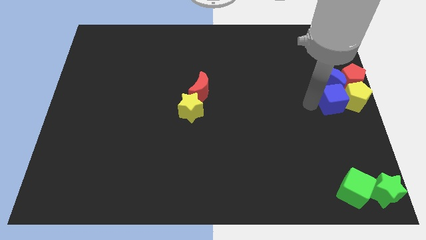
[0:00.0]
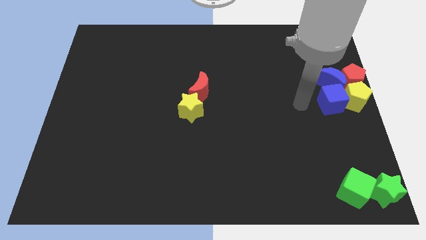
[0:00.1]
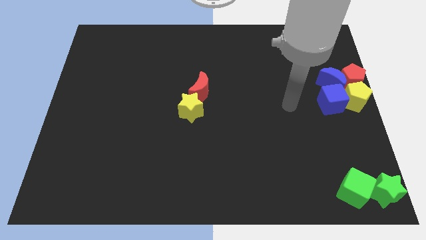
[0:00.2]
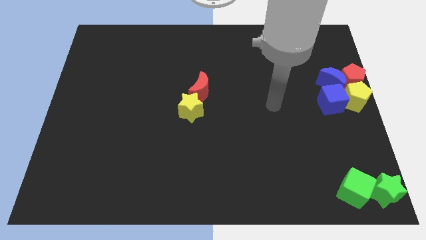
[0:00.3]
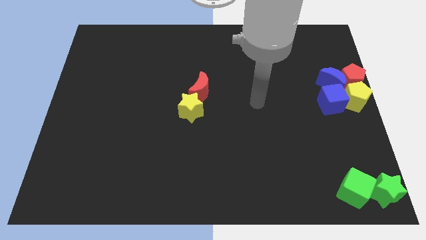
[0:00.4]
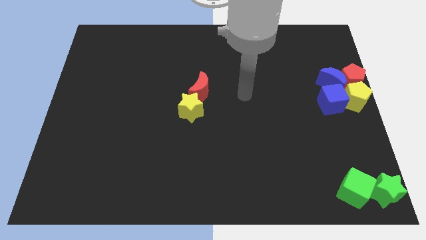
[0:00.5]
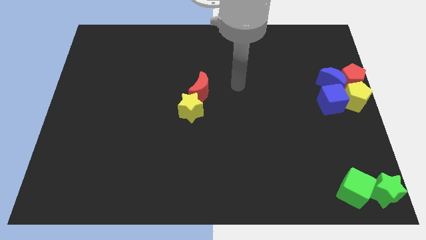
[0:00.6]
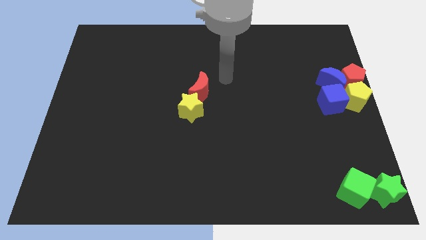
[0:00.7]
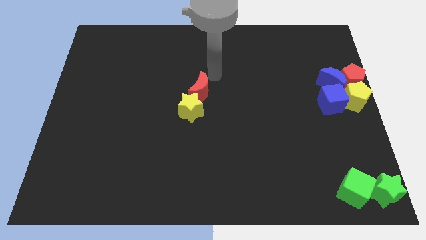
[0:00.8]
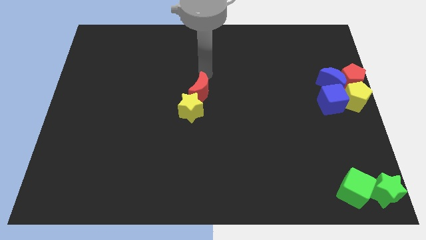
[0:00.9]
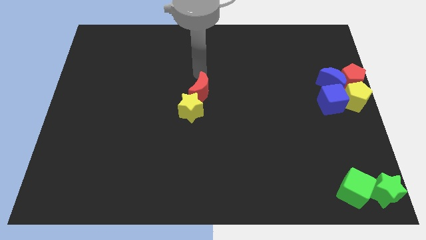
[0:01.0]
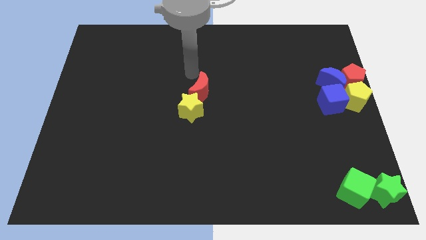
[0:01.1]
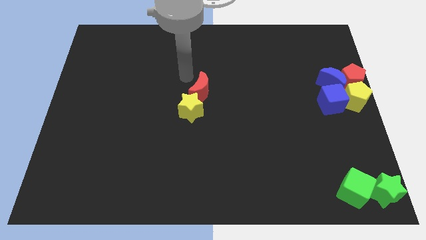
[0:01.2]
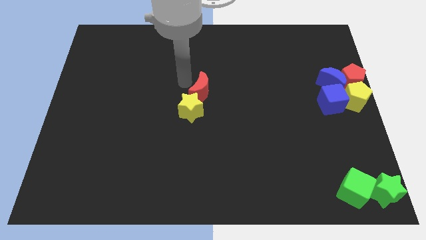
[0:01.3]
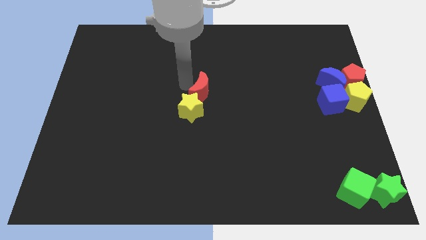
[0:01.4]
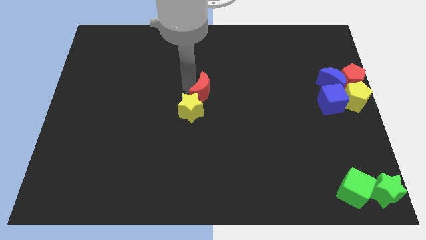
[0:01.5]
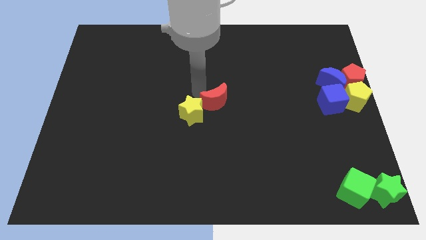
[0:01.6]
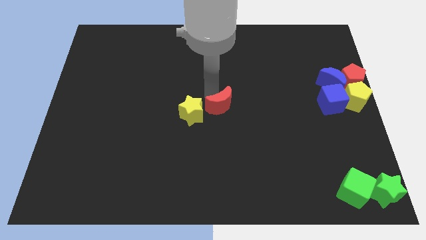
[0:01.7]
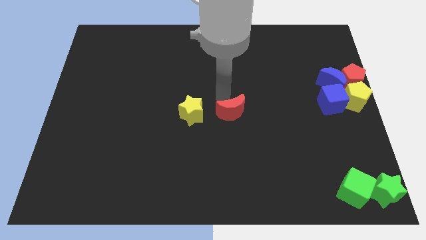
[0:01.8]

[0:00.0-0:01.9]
push the red crescent to the right of the yellow star

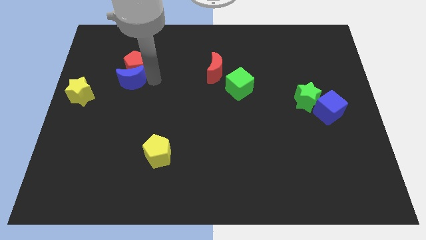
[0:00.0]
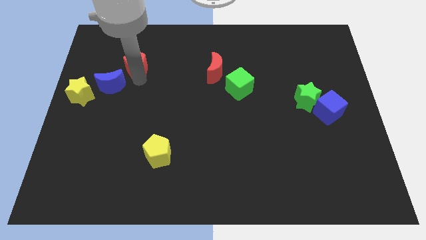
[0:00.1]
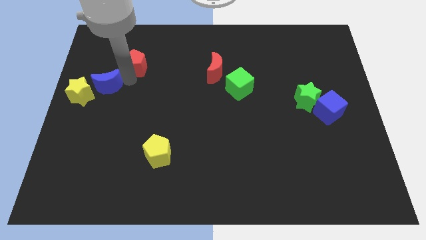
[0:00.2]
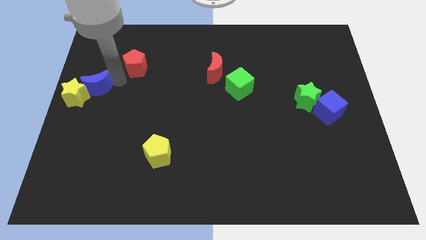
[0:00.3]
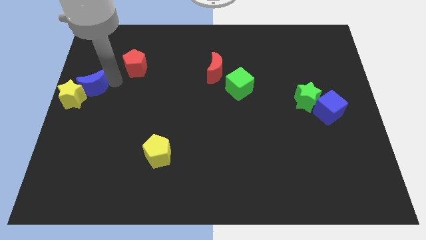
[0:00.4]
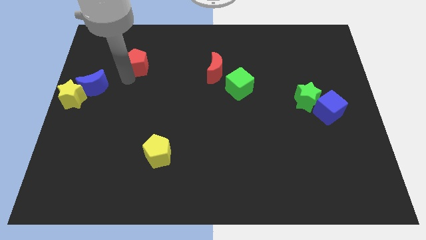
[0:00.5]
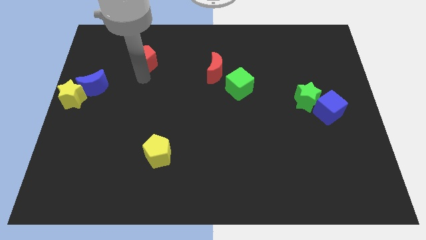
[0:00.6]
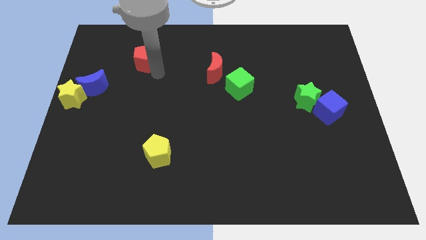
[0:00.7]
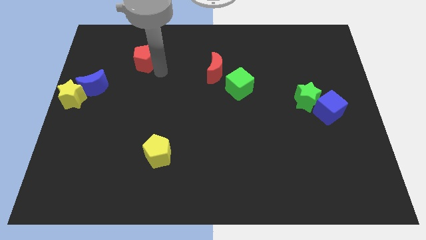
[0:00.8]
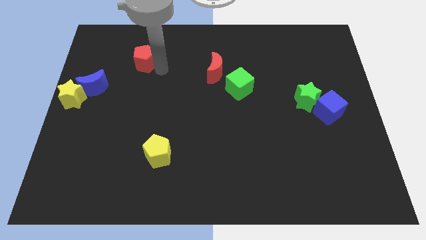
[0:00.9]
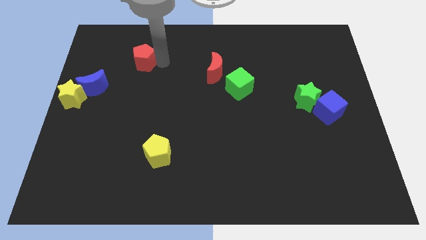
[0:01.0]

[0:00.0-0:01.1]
move the blue moon away from the red pentagon

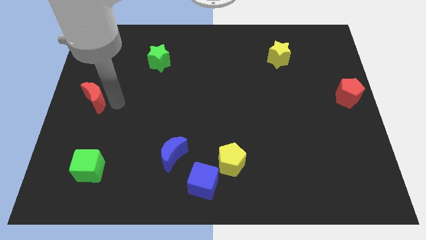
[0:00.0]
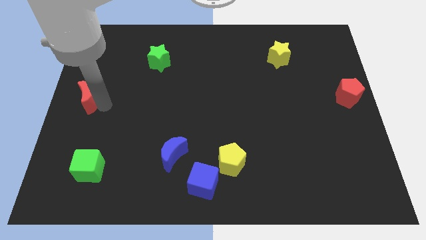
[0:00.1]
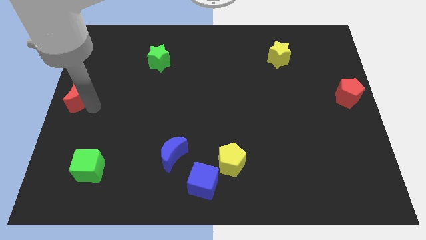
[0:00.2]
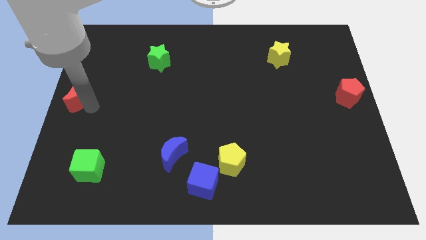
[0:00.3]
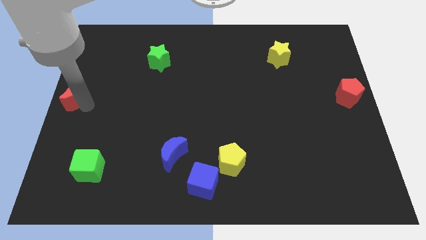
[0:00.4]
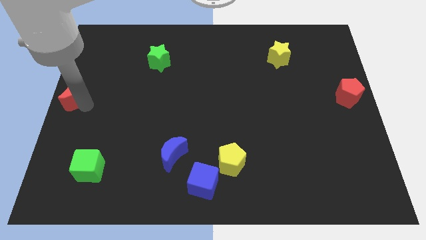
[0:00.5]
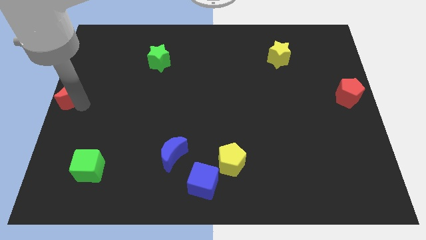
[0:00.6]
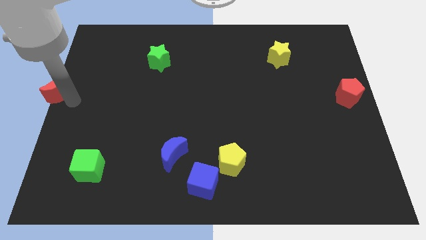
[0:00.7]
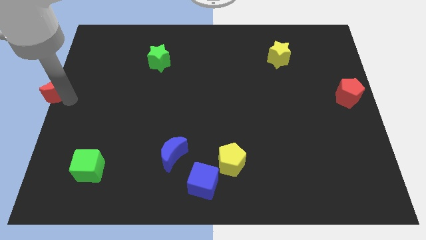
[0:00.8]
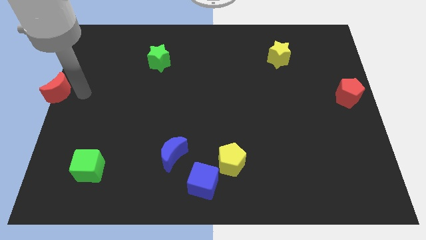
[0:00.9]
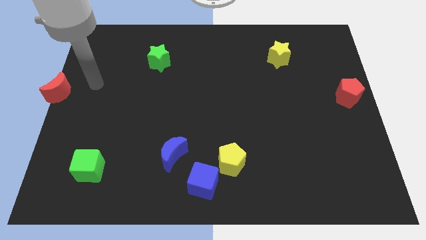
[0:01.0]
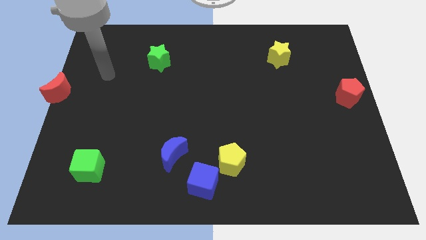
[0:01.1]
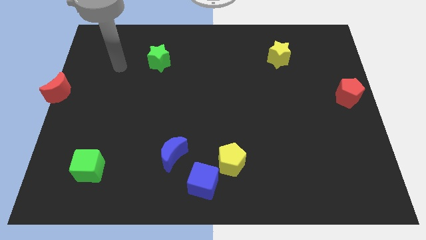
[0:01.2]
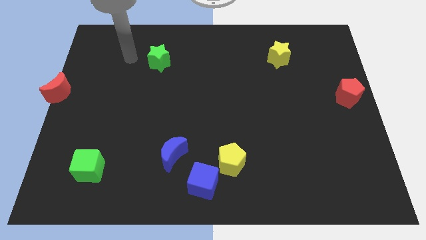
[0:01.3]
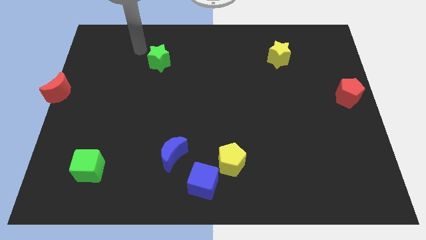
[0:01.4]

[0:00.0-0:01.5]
place the red moon at the center left of the board

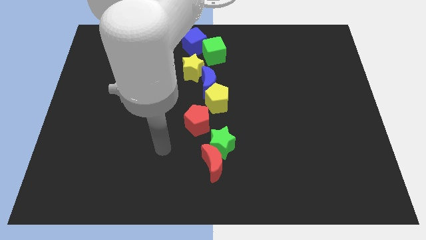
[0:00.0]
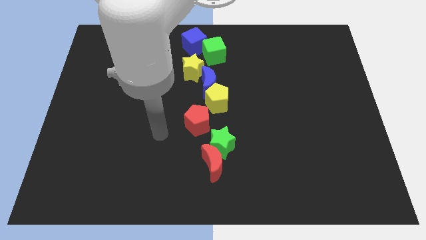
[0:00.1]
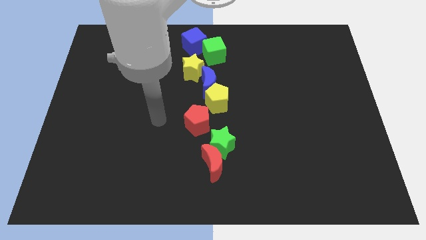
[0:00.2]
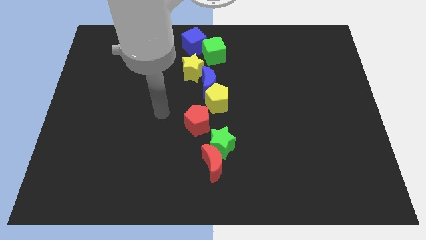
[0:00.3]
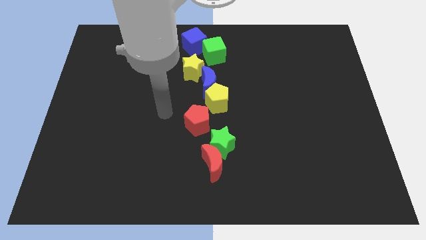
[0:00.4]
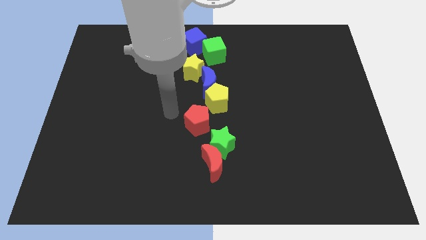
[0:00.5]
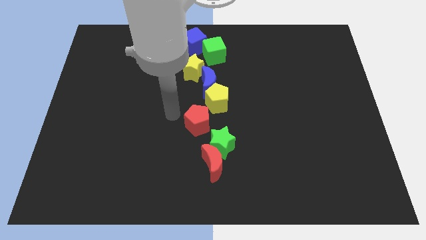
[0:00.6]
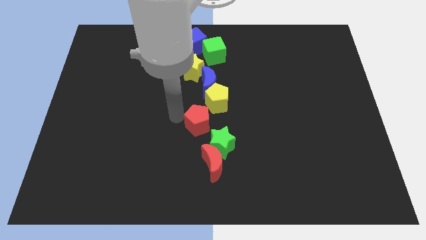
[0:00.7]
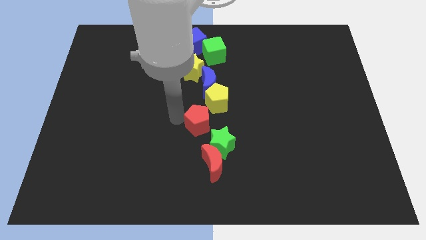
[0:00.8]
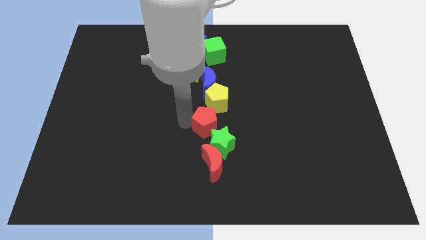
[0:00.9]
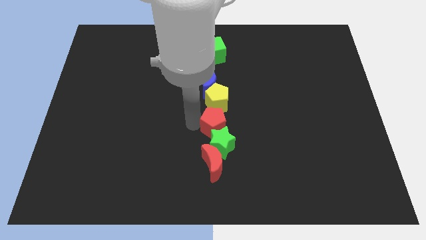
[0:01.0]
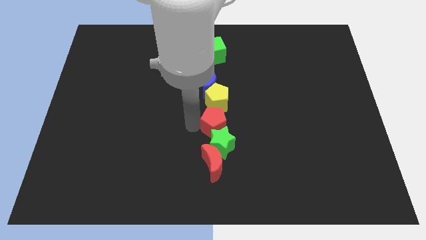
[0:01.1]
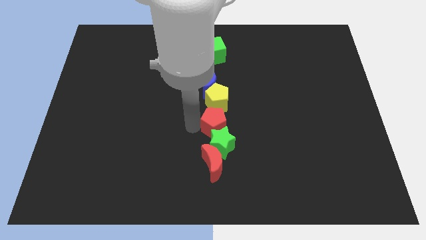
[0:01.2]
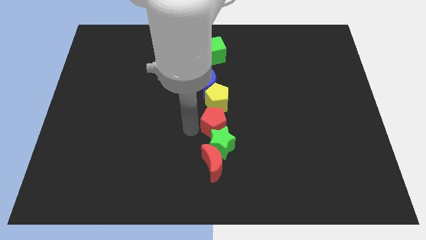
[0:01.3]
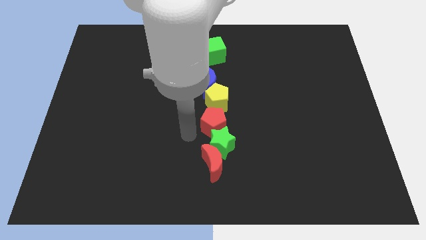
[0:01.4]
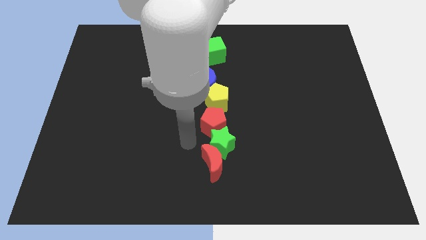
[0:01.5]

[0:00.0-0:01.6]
place the red pentagon in the middle of the yellow pentagon and the green star

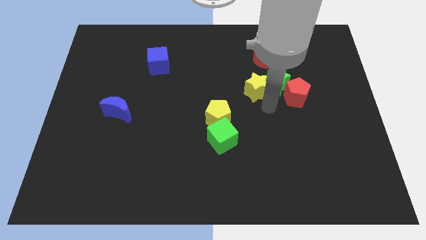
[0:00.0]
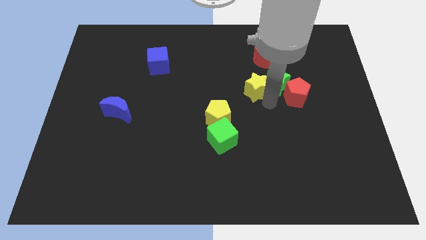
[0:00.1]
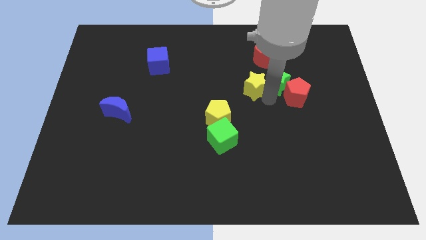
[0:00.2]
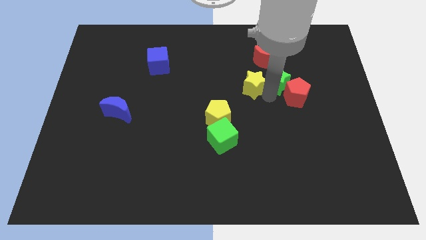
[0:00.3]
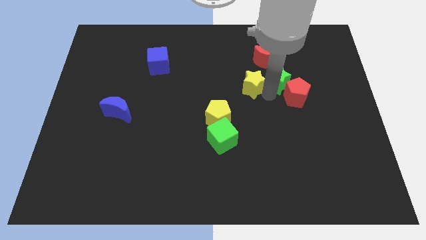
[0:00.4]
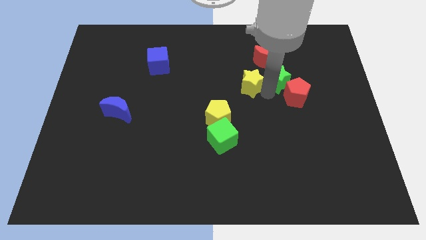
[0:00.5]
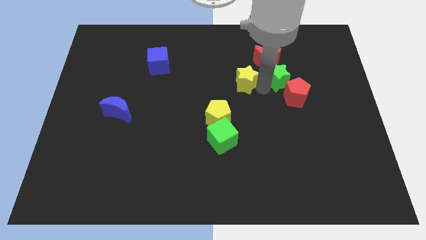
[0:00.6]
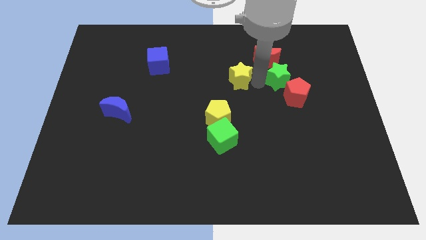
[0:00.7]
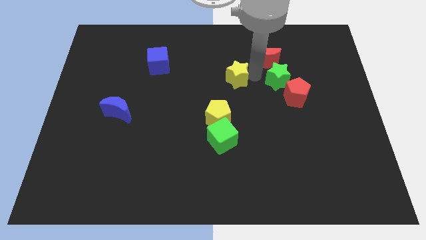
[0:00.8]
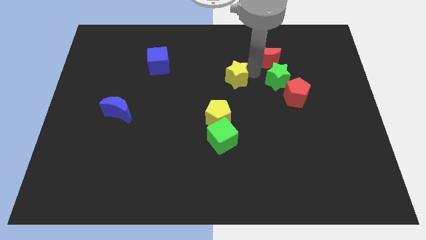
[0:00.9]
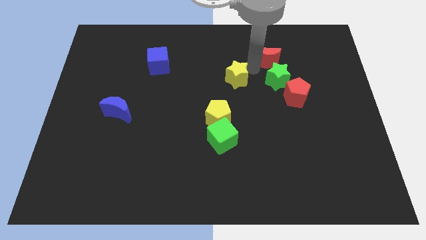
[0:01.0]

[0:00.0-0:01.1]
separate yellow star and green star

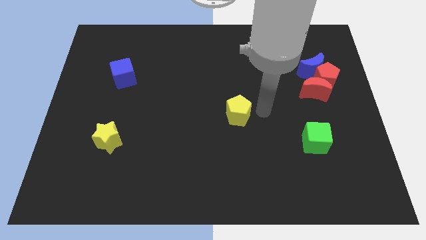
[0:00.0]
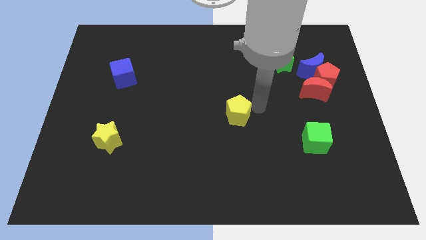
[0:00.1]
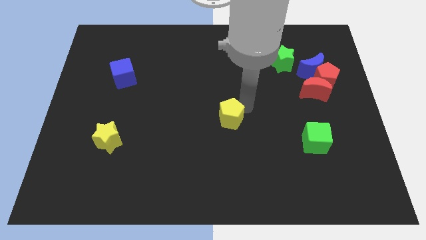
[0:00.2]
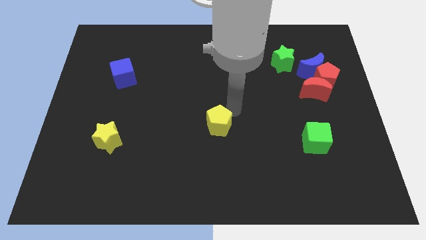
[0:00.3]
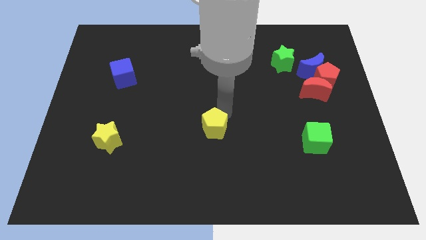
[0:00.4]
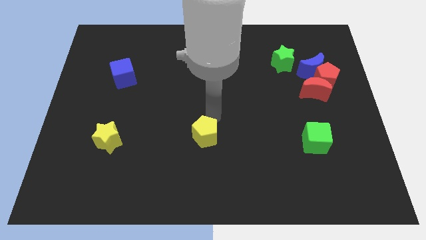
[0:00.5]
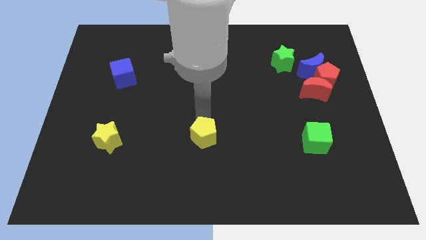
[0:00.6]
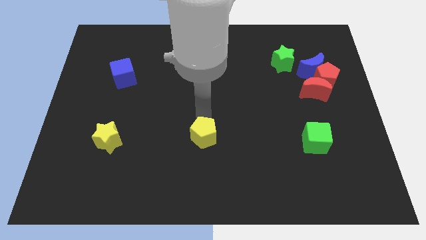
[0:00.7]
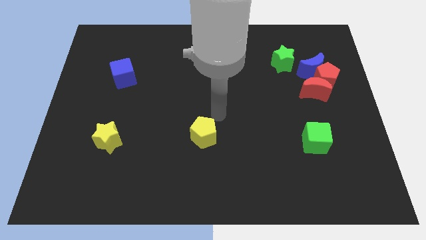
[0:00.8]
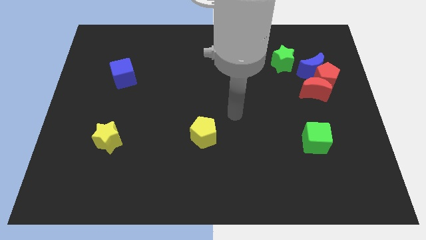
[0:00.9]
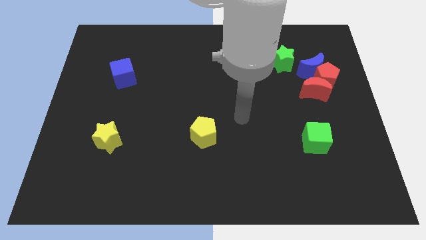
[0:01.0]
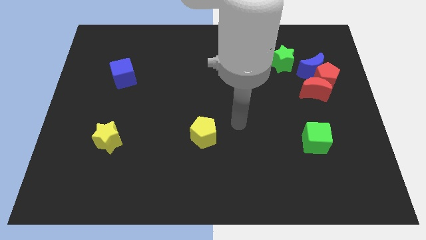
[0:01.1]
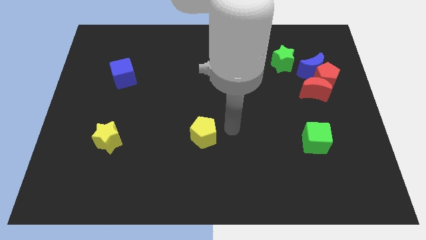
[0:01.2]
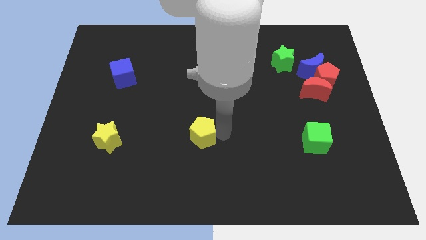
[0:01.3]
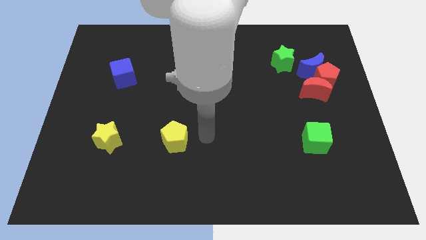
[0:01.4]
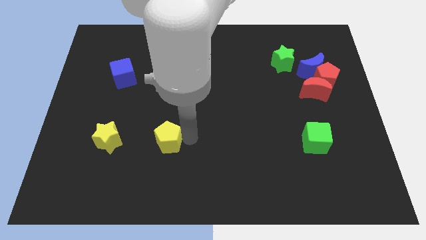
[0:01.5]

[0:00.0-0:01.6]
push the yellow pentagon closer to the yellow star

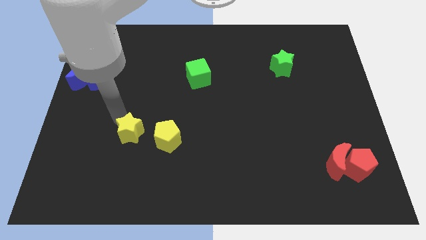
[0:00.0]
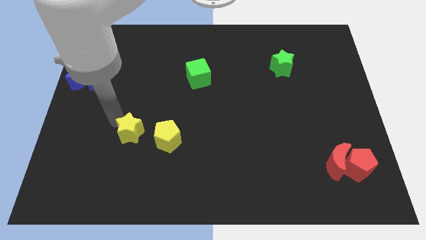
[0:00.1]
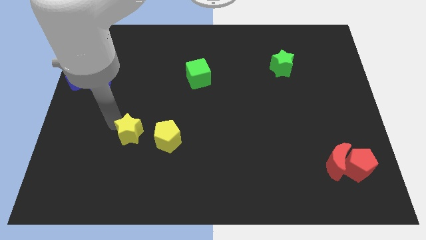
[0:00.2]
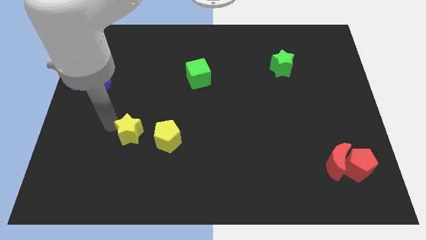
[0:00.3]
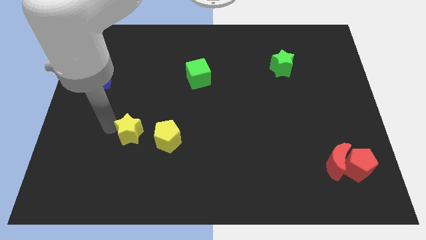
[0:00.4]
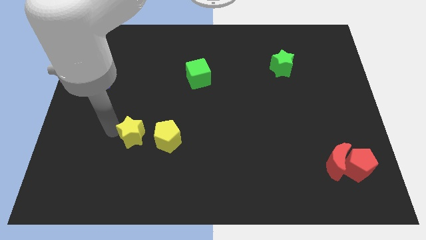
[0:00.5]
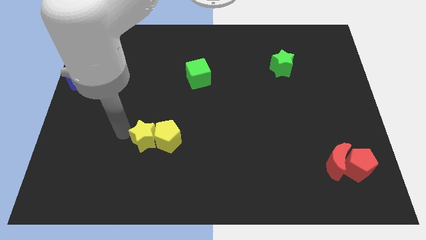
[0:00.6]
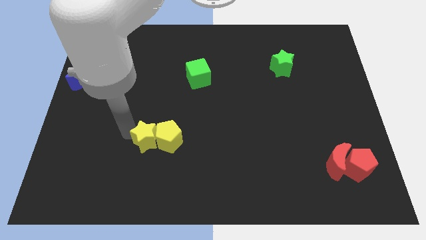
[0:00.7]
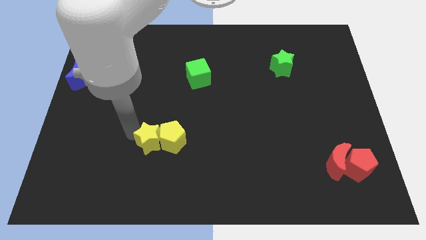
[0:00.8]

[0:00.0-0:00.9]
move the yellow star into the yellow pentagon
